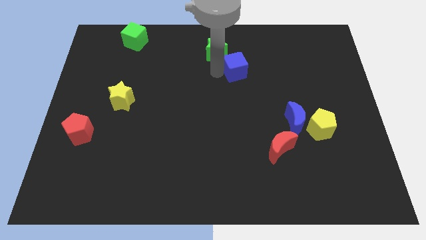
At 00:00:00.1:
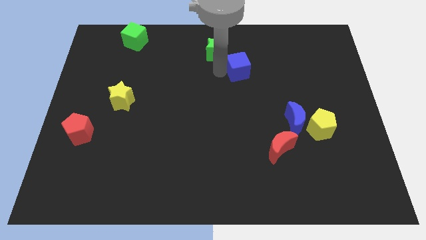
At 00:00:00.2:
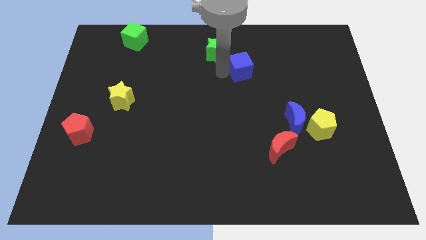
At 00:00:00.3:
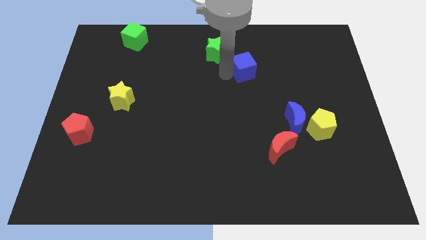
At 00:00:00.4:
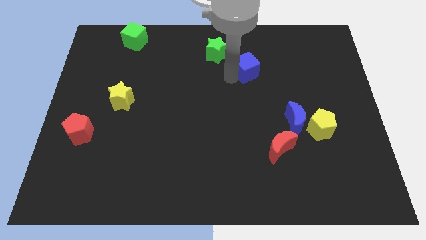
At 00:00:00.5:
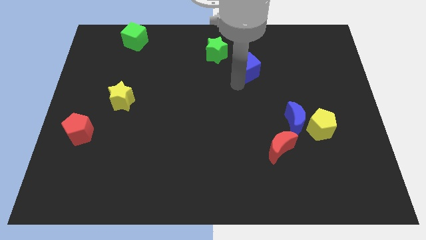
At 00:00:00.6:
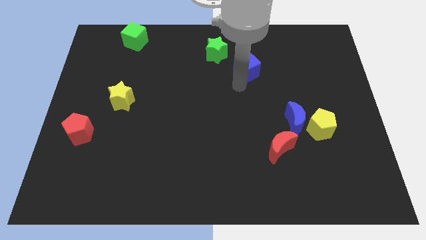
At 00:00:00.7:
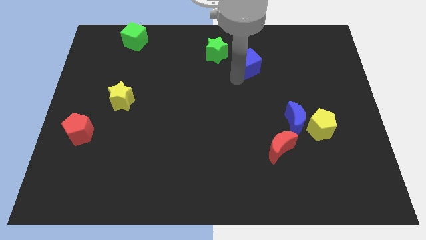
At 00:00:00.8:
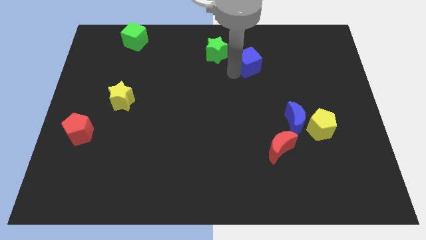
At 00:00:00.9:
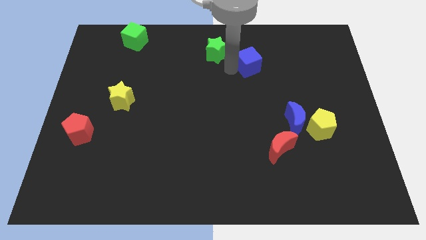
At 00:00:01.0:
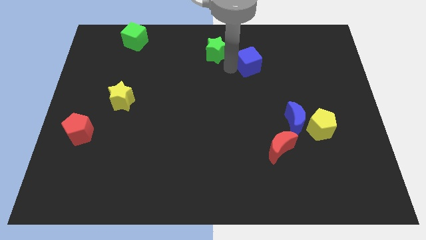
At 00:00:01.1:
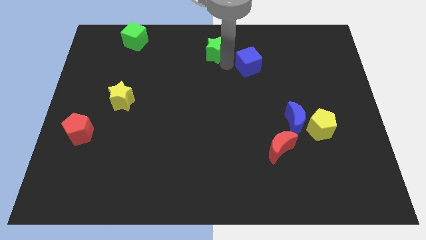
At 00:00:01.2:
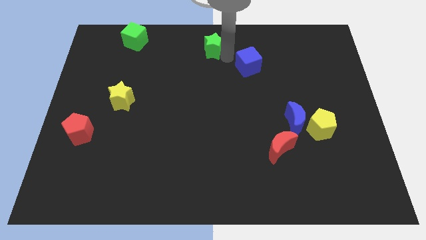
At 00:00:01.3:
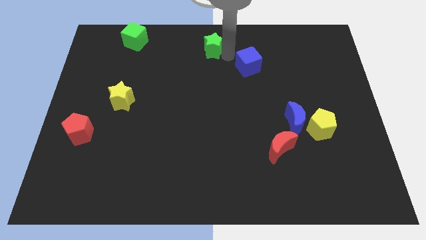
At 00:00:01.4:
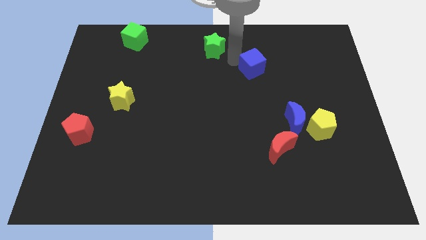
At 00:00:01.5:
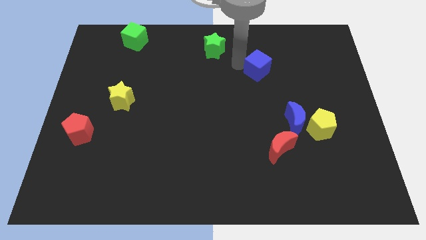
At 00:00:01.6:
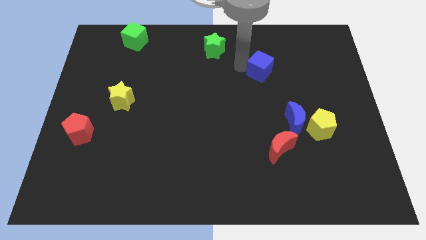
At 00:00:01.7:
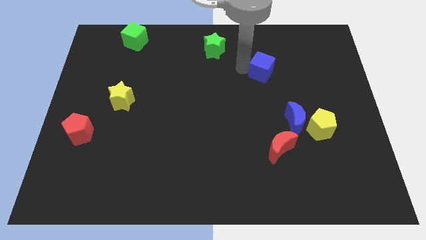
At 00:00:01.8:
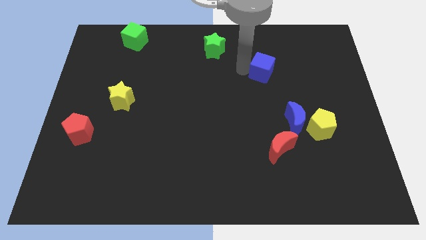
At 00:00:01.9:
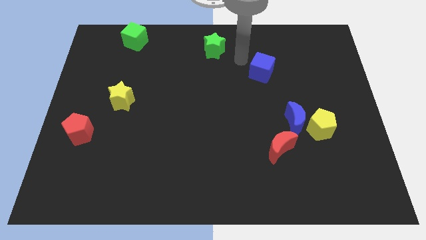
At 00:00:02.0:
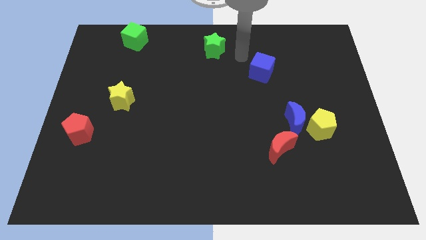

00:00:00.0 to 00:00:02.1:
separate blue moon from green star

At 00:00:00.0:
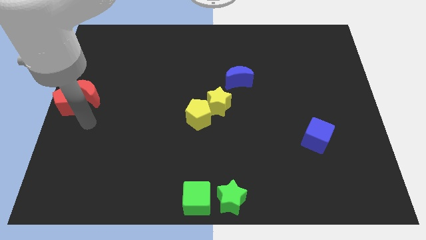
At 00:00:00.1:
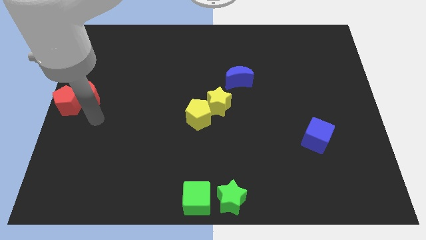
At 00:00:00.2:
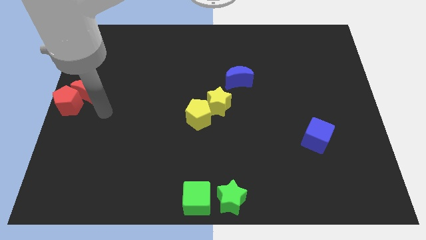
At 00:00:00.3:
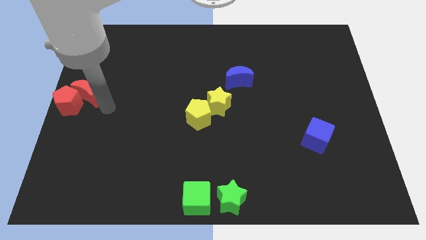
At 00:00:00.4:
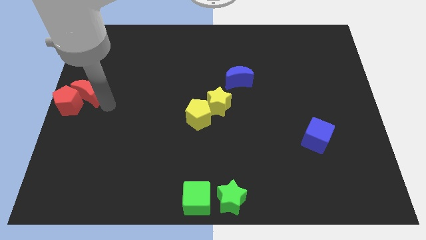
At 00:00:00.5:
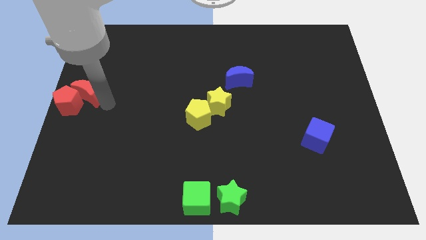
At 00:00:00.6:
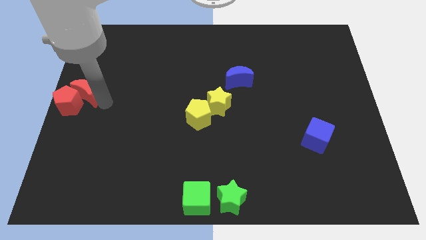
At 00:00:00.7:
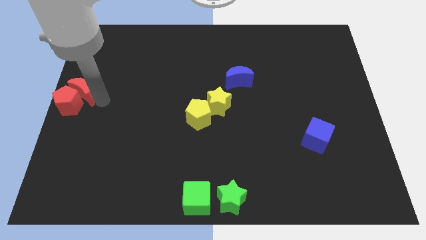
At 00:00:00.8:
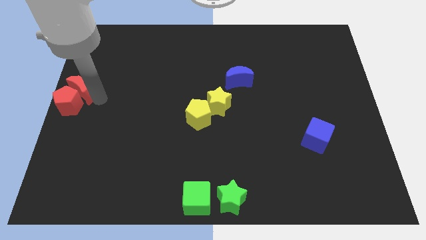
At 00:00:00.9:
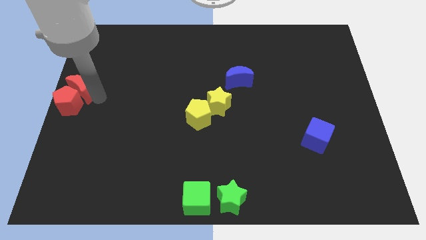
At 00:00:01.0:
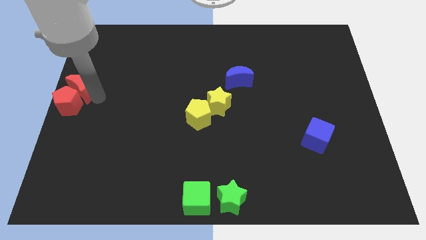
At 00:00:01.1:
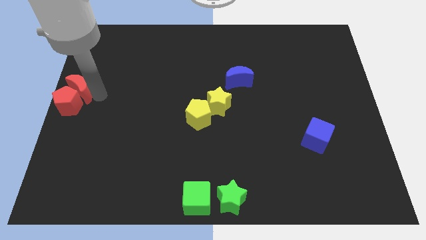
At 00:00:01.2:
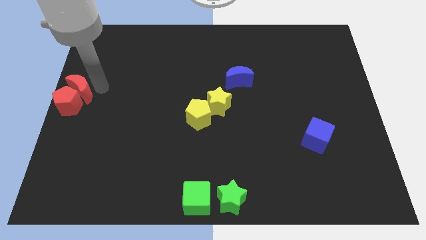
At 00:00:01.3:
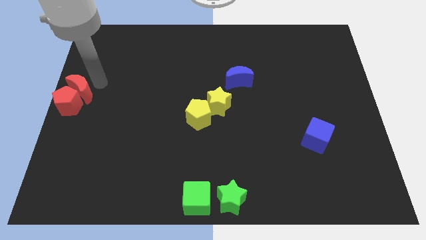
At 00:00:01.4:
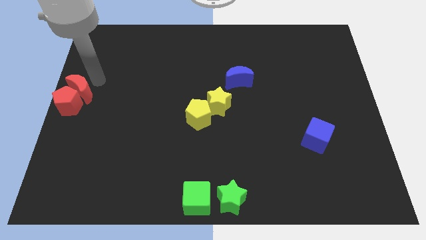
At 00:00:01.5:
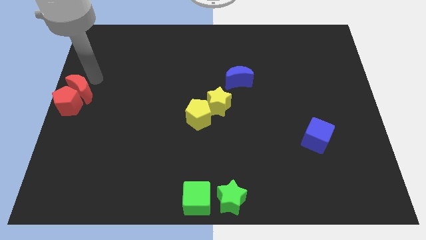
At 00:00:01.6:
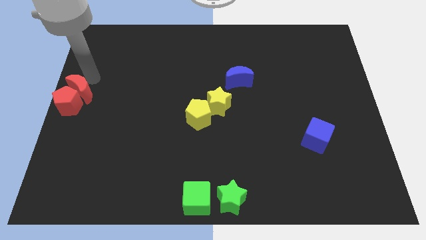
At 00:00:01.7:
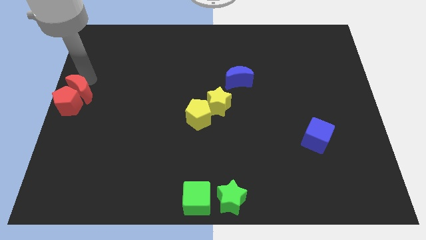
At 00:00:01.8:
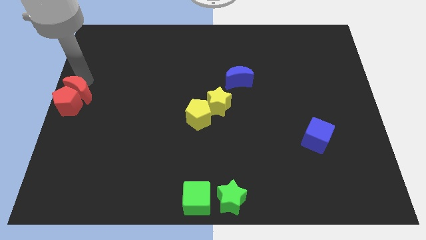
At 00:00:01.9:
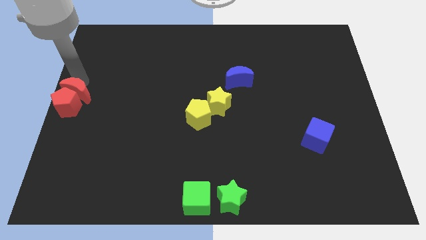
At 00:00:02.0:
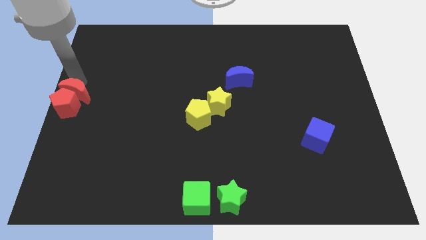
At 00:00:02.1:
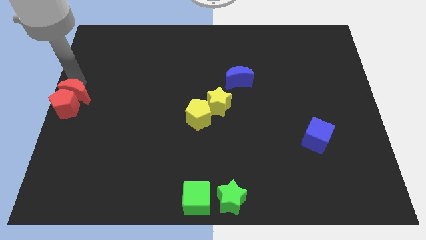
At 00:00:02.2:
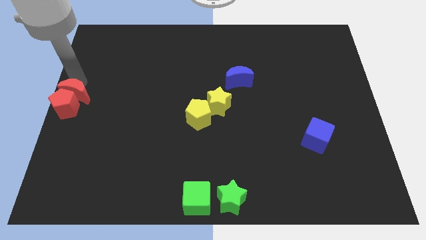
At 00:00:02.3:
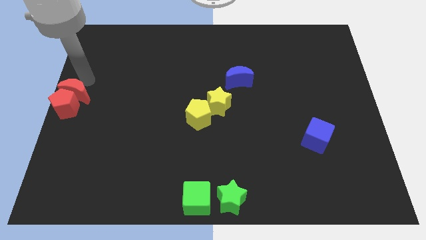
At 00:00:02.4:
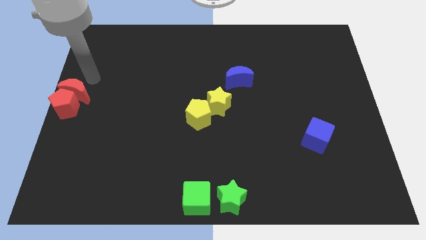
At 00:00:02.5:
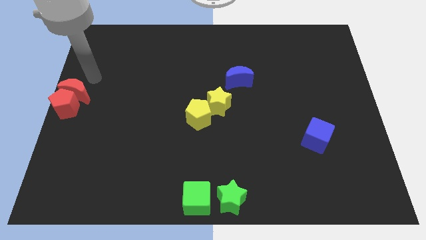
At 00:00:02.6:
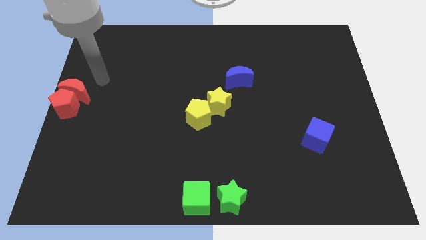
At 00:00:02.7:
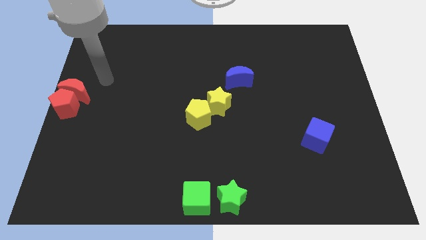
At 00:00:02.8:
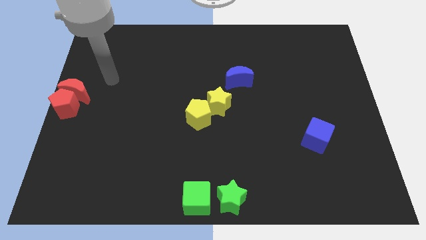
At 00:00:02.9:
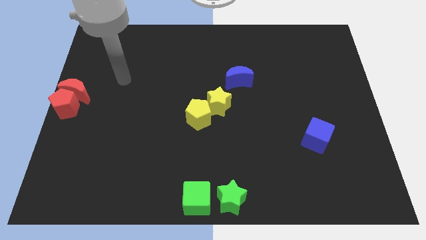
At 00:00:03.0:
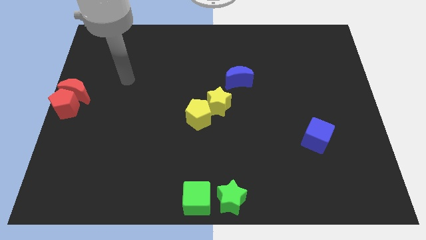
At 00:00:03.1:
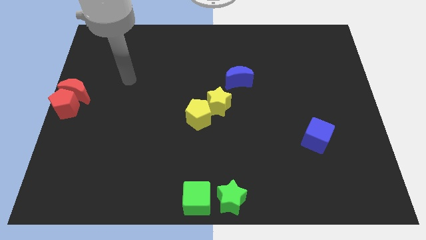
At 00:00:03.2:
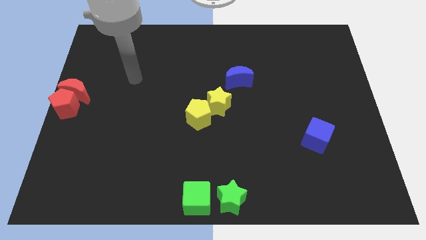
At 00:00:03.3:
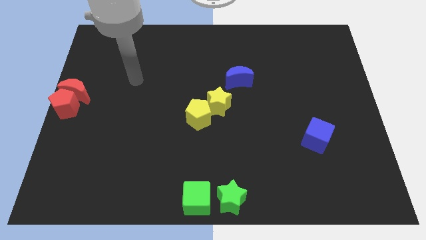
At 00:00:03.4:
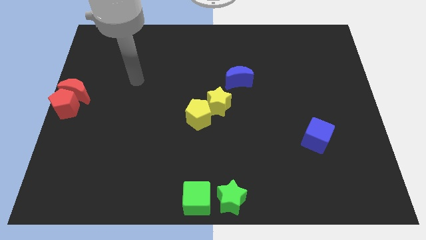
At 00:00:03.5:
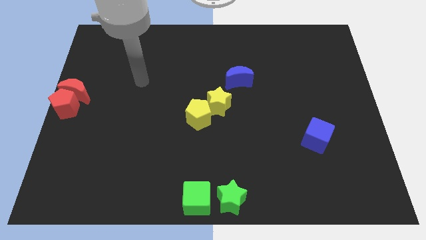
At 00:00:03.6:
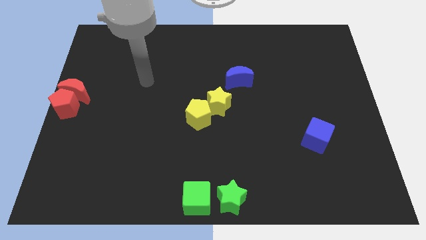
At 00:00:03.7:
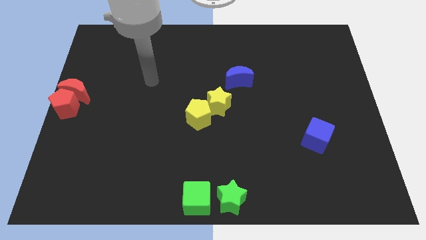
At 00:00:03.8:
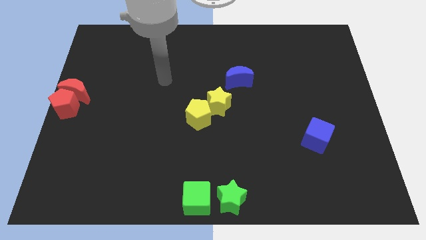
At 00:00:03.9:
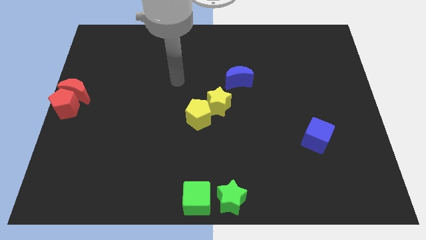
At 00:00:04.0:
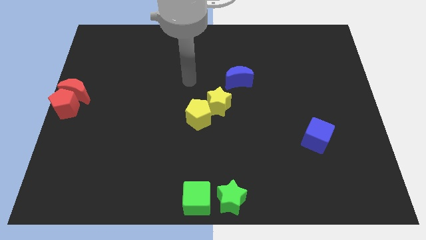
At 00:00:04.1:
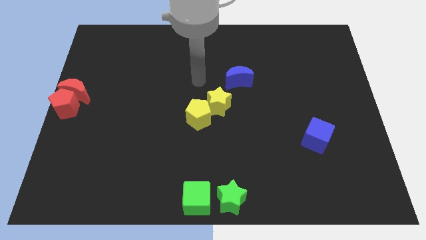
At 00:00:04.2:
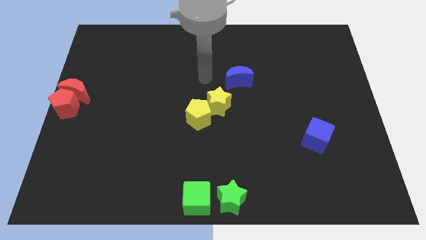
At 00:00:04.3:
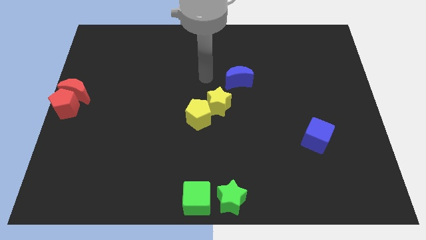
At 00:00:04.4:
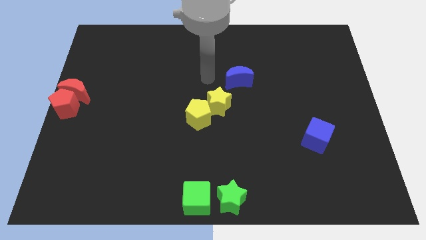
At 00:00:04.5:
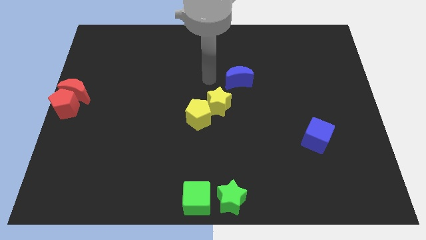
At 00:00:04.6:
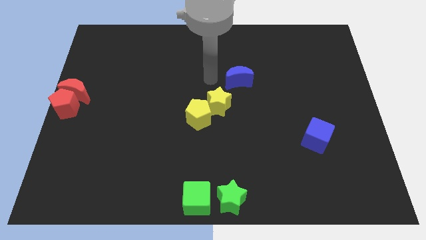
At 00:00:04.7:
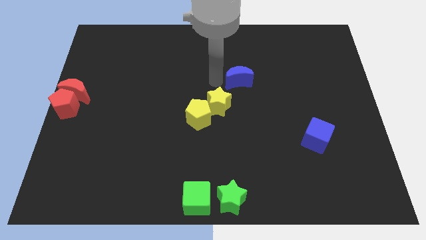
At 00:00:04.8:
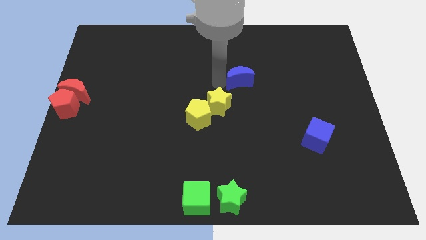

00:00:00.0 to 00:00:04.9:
place your arm to the left of blue crescent

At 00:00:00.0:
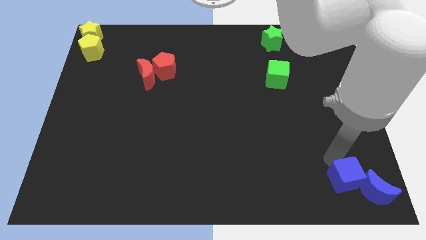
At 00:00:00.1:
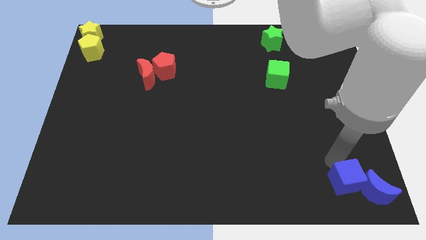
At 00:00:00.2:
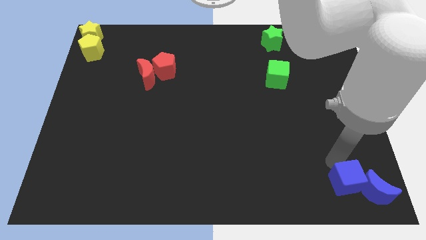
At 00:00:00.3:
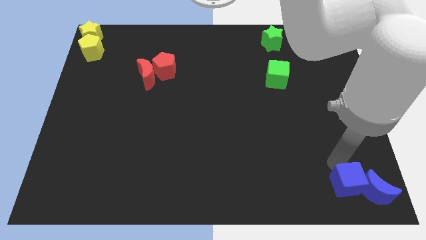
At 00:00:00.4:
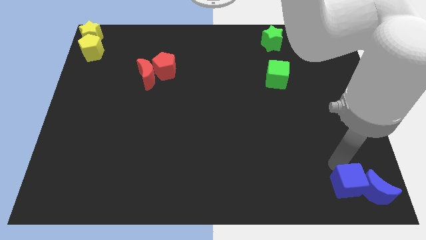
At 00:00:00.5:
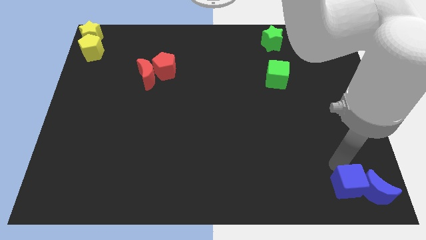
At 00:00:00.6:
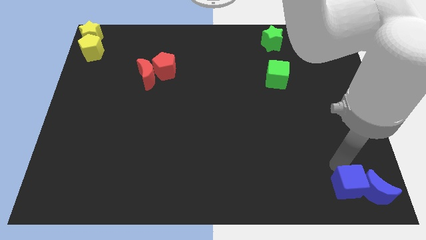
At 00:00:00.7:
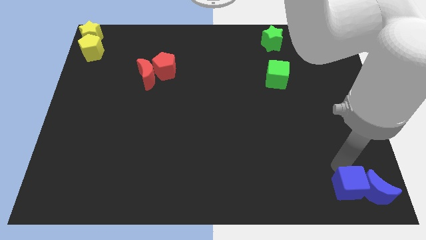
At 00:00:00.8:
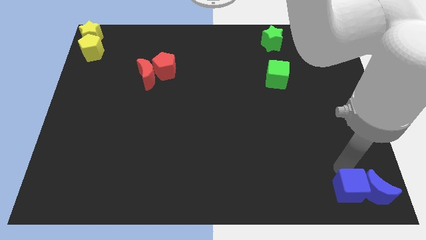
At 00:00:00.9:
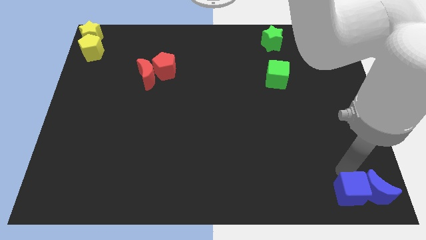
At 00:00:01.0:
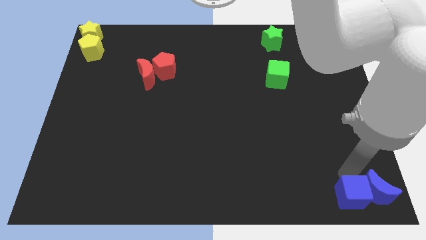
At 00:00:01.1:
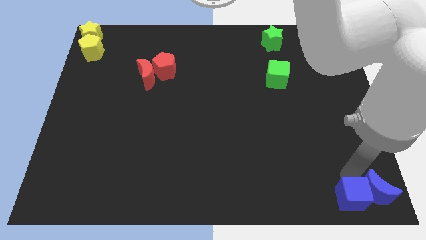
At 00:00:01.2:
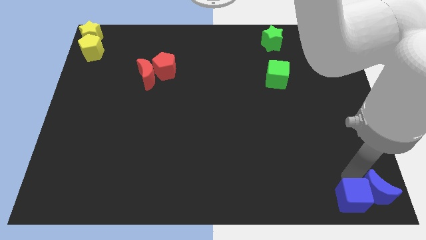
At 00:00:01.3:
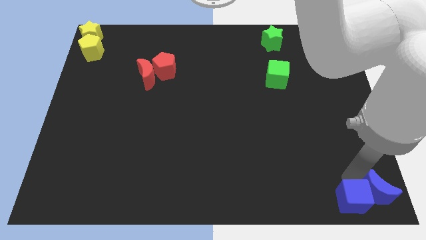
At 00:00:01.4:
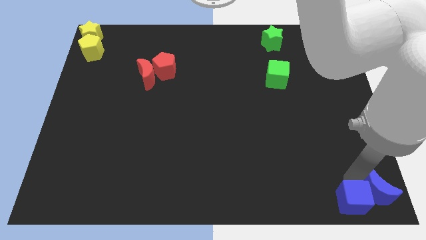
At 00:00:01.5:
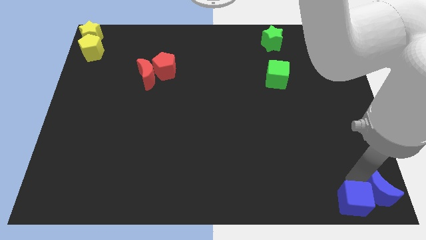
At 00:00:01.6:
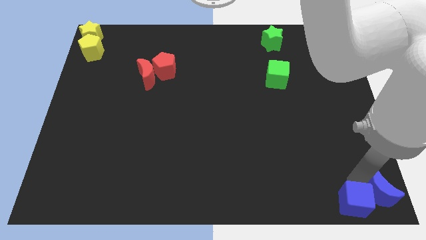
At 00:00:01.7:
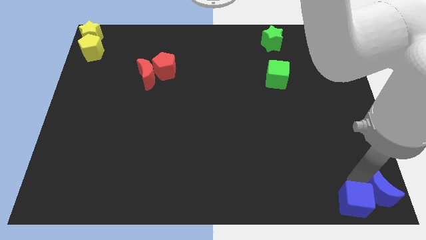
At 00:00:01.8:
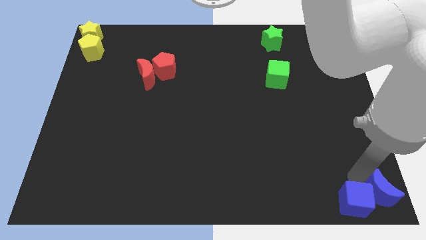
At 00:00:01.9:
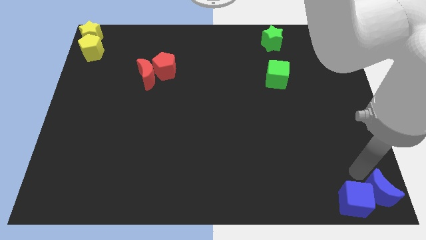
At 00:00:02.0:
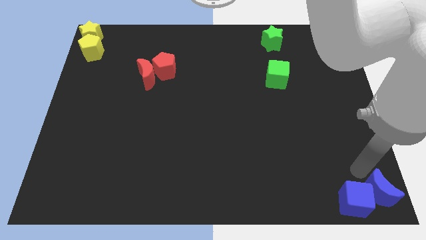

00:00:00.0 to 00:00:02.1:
push the blue blocks to bottom right corner of the board
